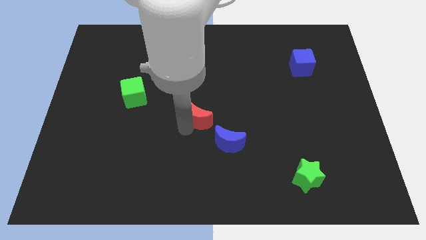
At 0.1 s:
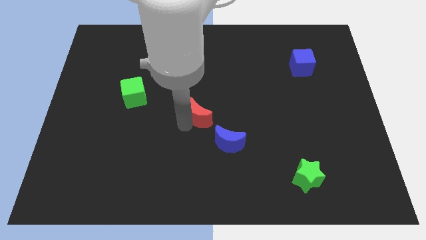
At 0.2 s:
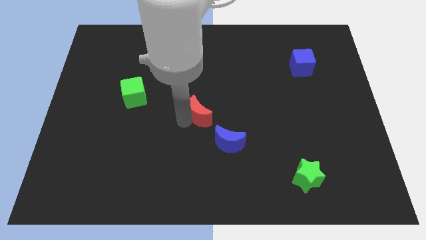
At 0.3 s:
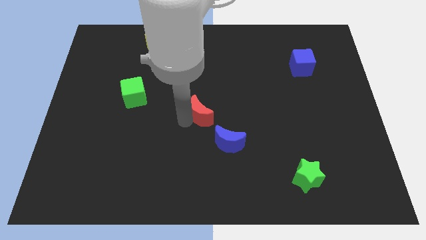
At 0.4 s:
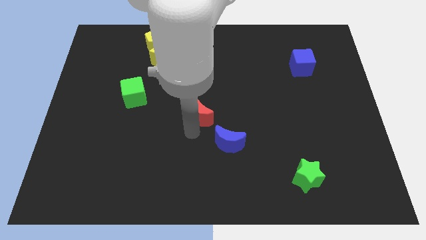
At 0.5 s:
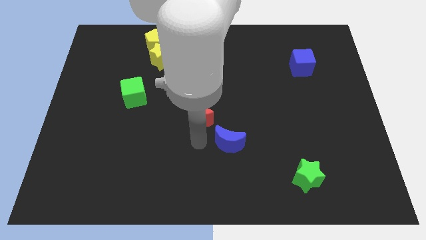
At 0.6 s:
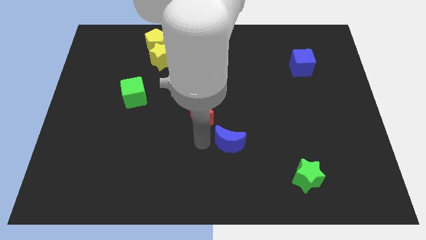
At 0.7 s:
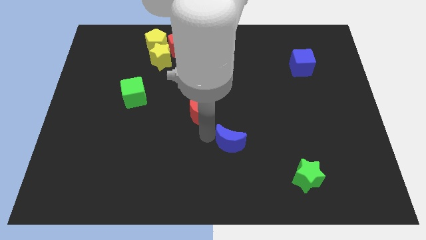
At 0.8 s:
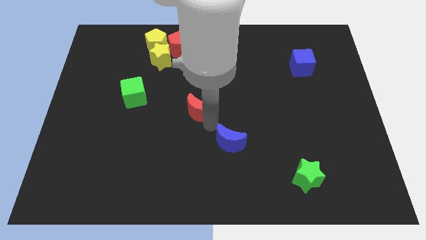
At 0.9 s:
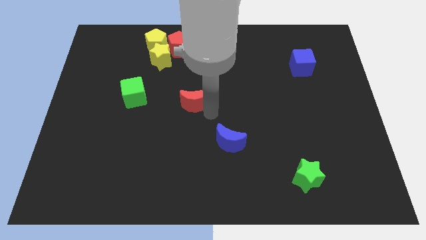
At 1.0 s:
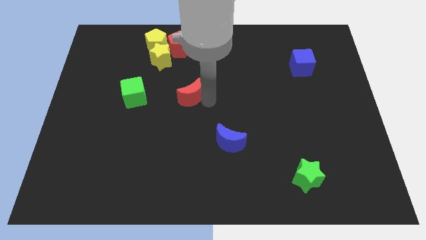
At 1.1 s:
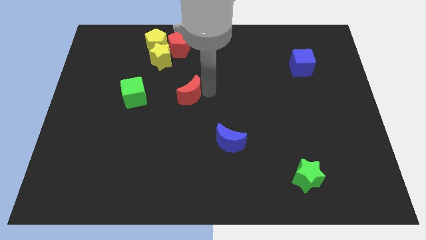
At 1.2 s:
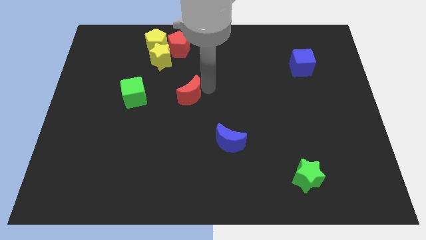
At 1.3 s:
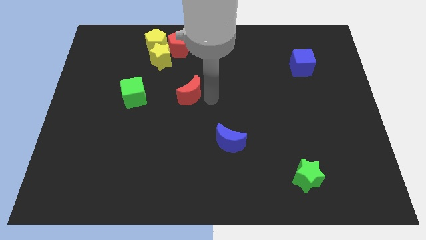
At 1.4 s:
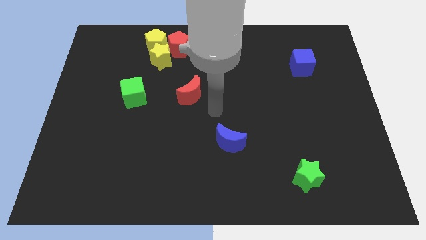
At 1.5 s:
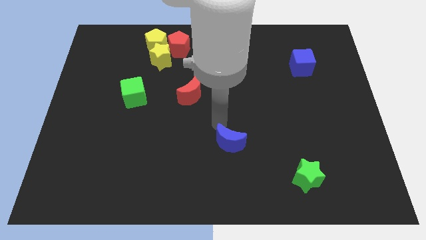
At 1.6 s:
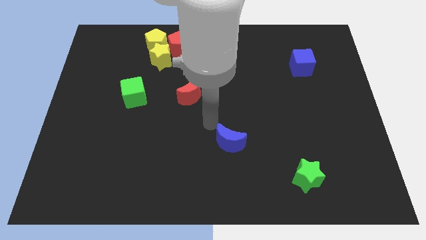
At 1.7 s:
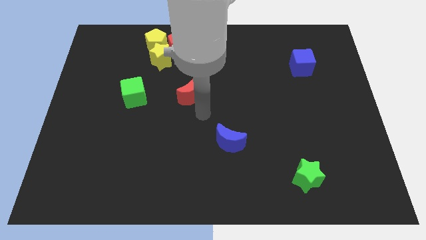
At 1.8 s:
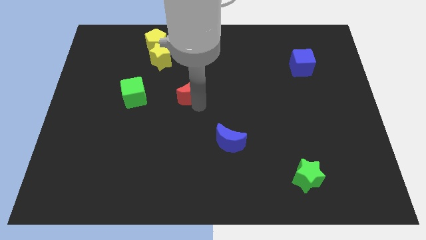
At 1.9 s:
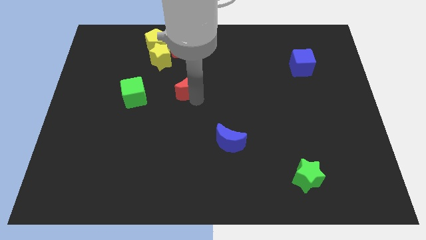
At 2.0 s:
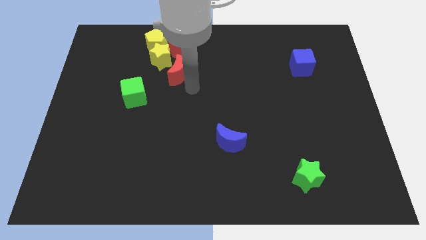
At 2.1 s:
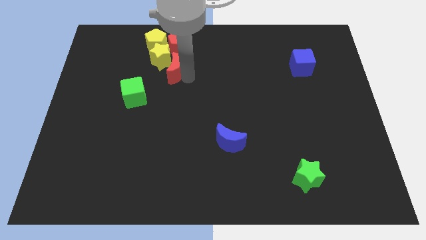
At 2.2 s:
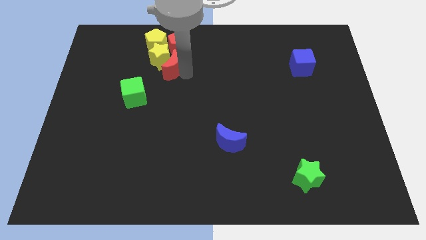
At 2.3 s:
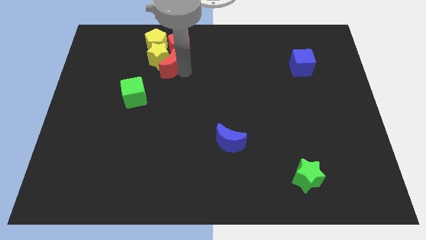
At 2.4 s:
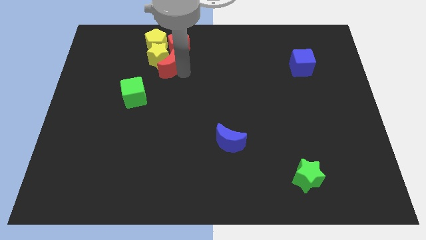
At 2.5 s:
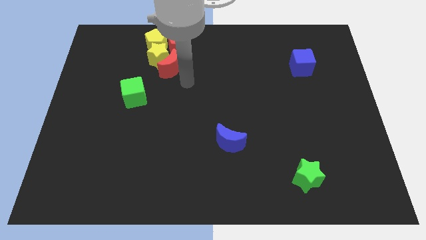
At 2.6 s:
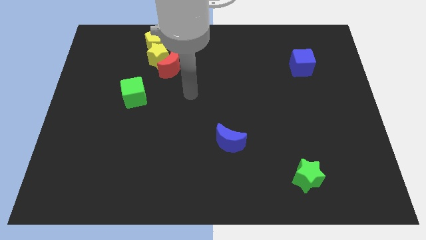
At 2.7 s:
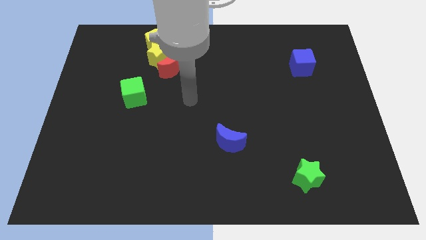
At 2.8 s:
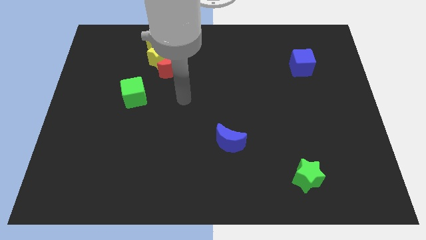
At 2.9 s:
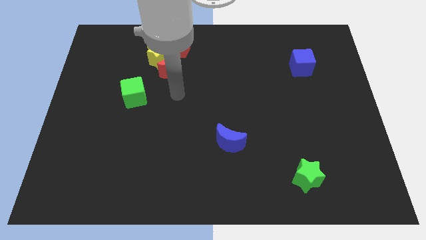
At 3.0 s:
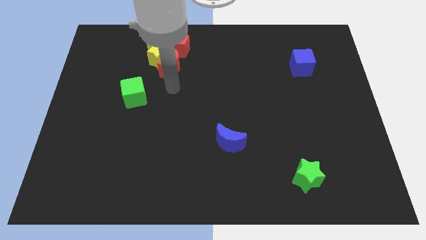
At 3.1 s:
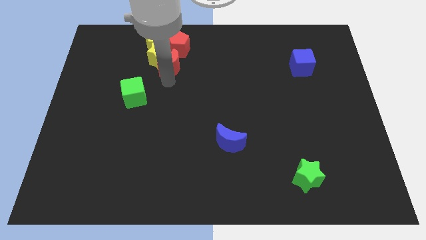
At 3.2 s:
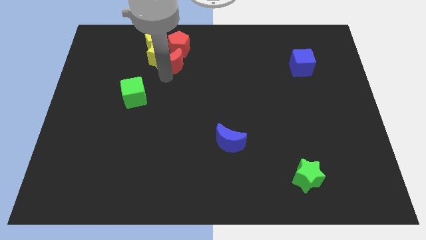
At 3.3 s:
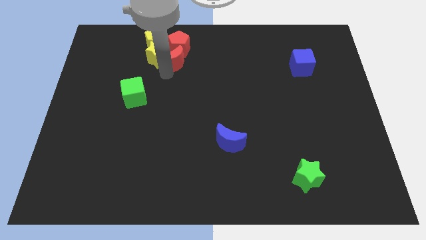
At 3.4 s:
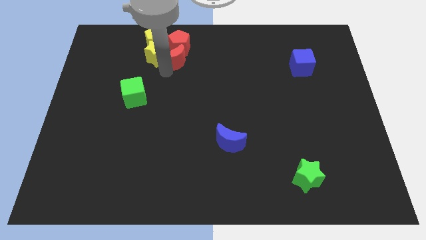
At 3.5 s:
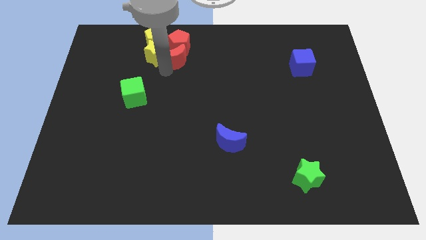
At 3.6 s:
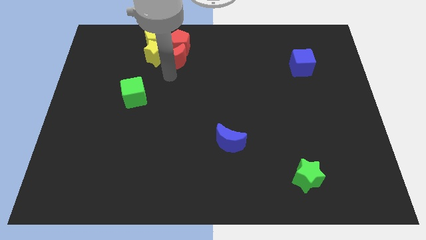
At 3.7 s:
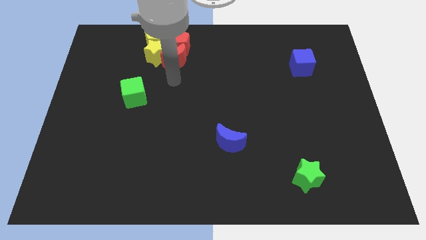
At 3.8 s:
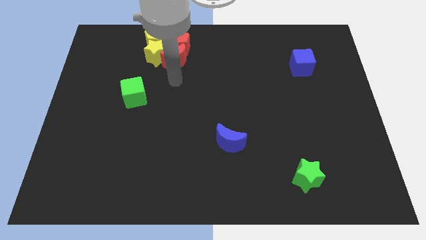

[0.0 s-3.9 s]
push the red crescent to the group of blocks

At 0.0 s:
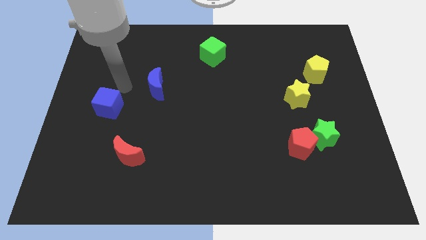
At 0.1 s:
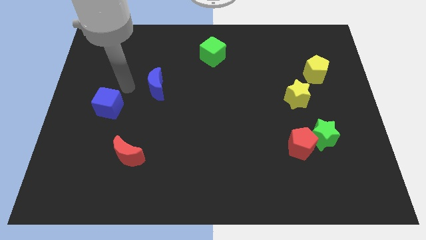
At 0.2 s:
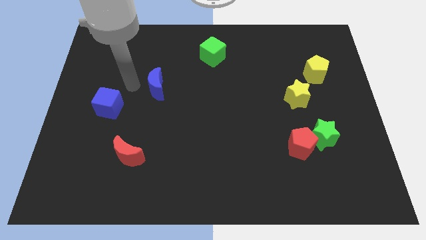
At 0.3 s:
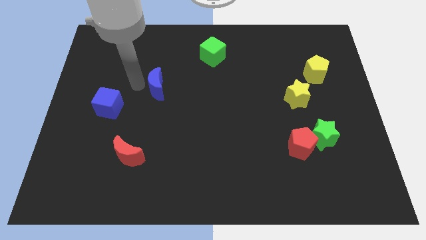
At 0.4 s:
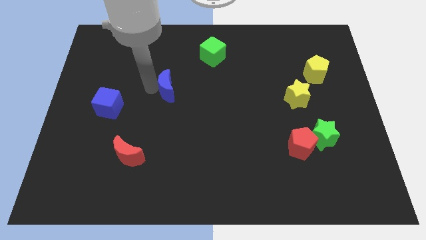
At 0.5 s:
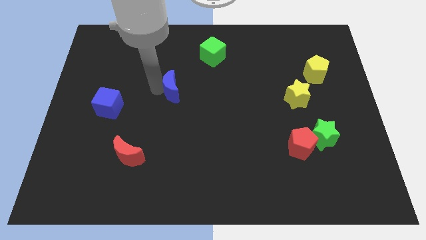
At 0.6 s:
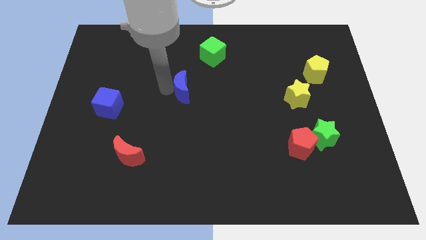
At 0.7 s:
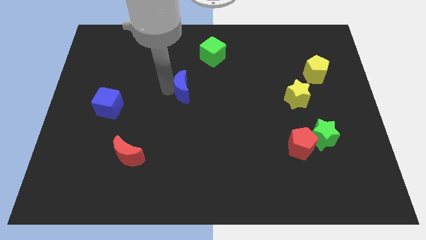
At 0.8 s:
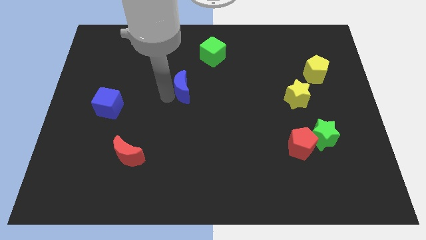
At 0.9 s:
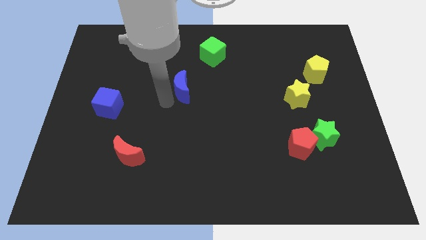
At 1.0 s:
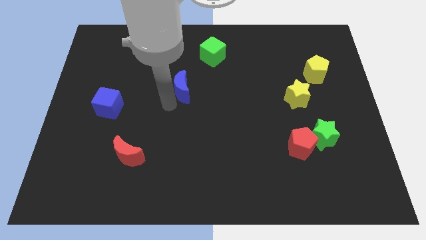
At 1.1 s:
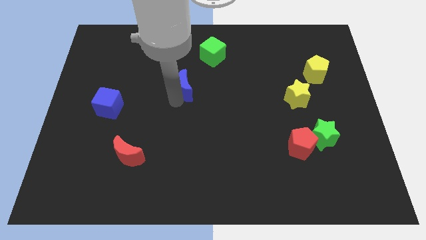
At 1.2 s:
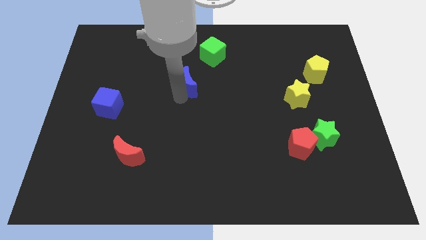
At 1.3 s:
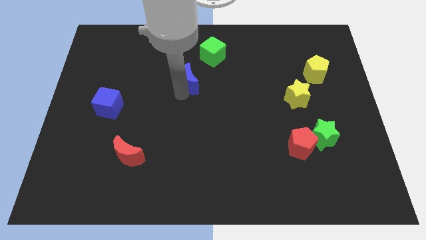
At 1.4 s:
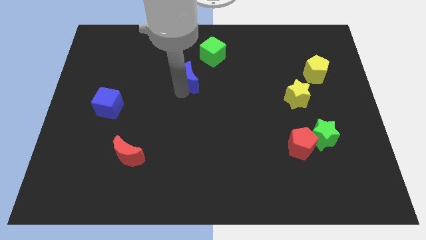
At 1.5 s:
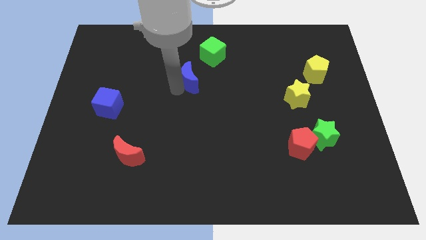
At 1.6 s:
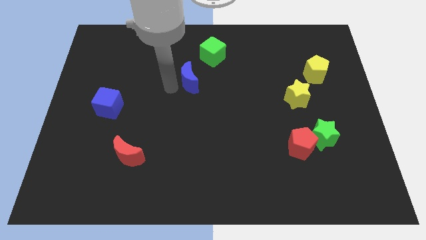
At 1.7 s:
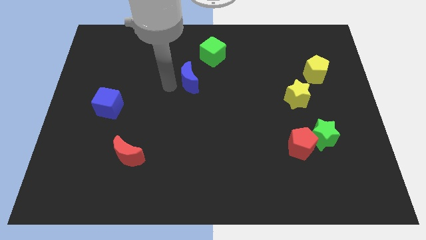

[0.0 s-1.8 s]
move the blue crescent towards the green cube

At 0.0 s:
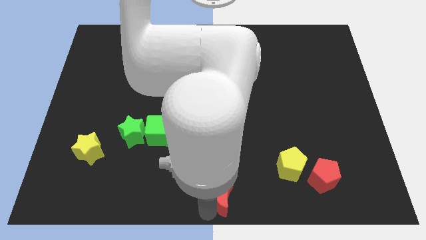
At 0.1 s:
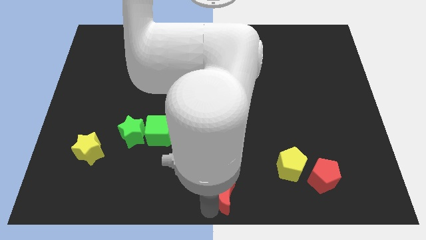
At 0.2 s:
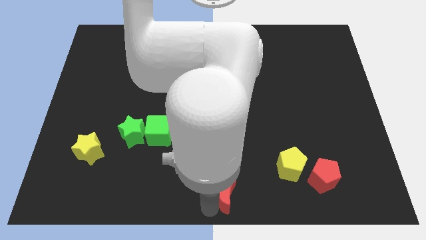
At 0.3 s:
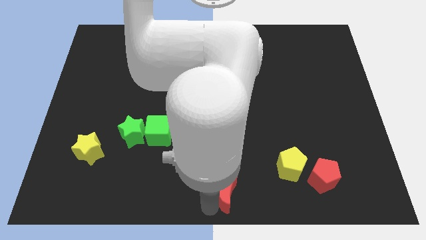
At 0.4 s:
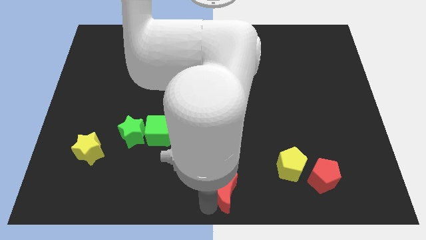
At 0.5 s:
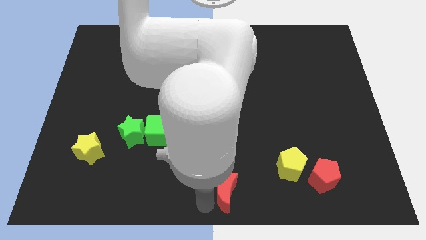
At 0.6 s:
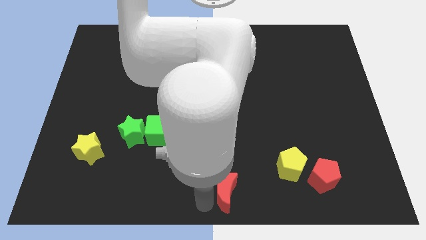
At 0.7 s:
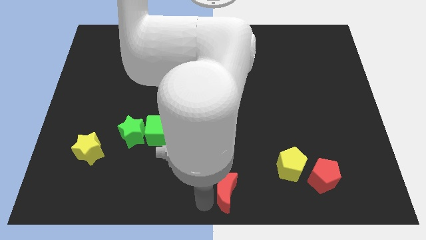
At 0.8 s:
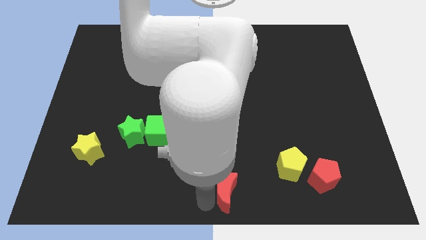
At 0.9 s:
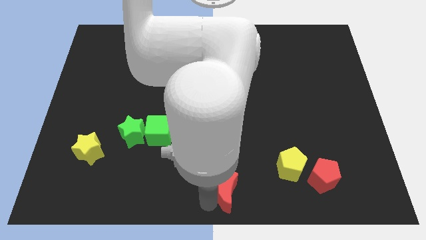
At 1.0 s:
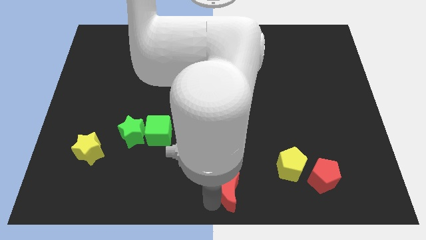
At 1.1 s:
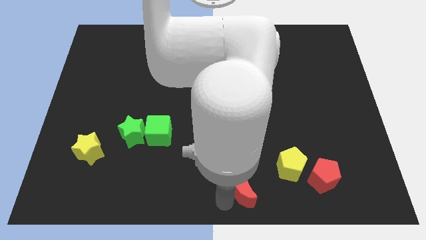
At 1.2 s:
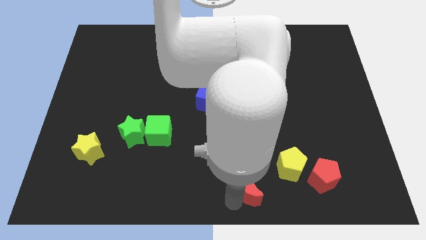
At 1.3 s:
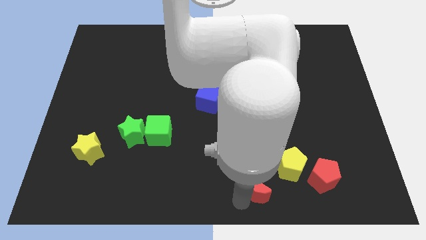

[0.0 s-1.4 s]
move the red crescent towards the yellow pentagon

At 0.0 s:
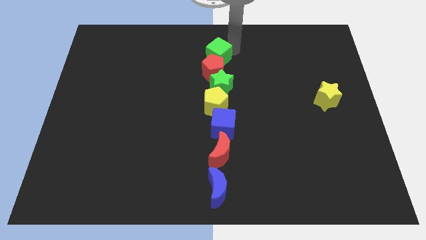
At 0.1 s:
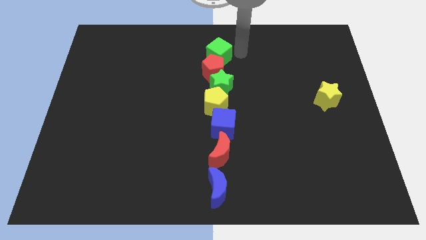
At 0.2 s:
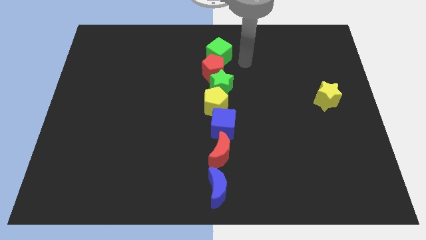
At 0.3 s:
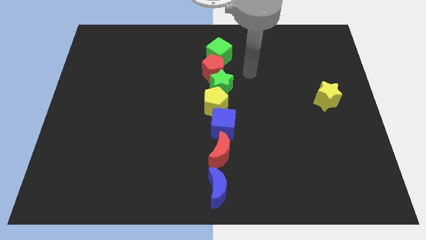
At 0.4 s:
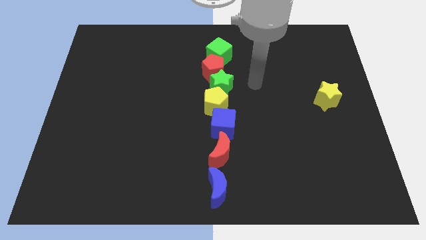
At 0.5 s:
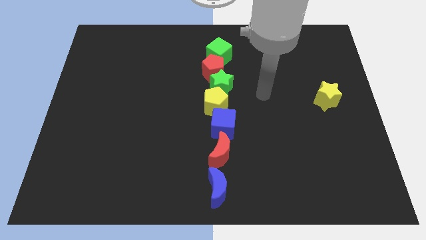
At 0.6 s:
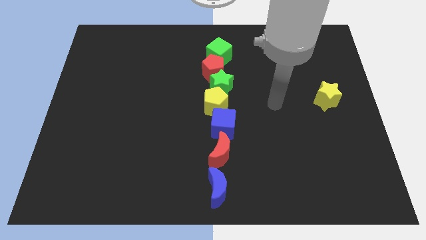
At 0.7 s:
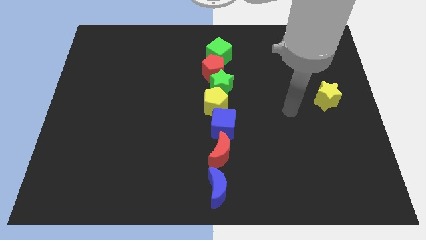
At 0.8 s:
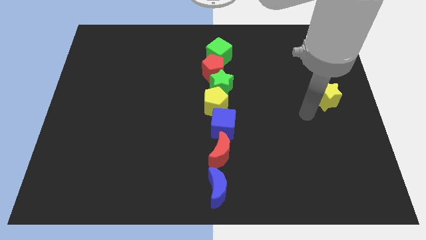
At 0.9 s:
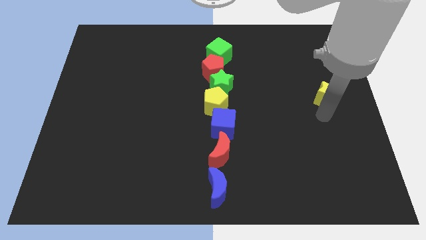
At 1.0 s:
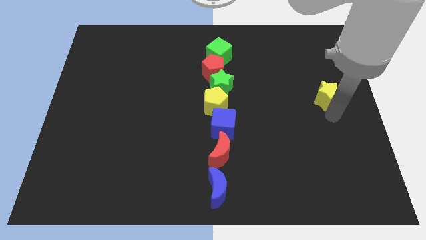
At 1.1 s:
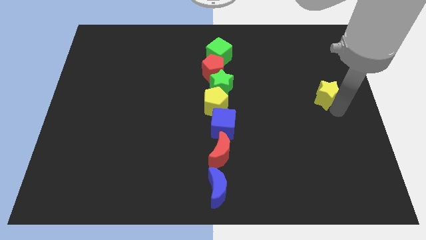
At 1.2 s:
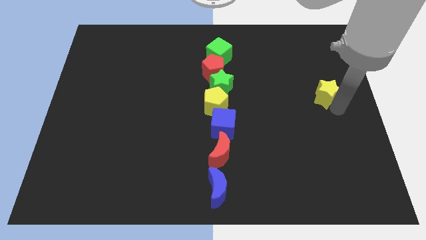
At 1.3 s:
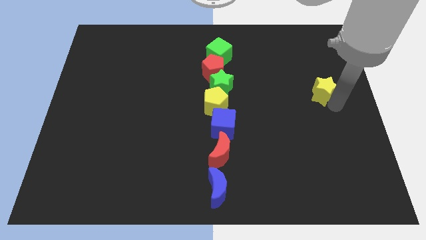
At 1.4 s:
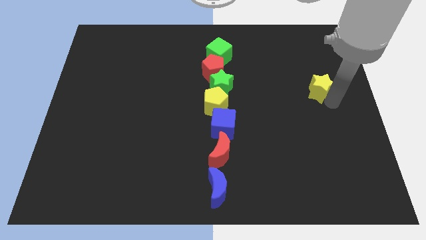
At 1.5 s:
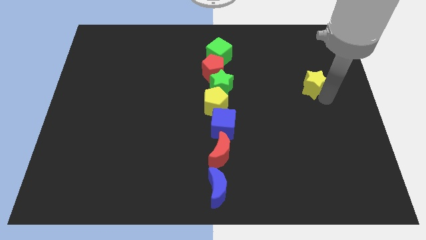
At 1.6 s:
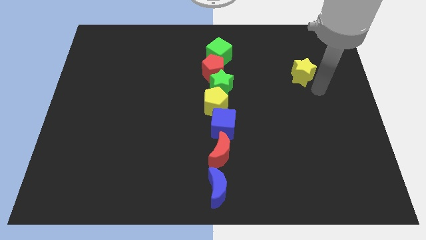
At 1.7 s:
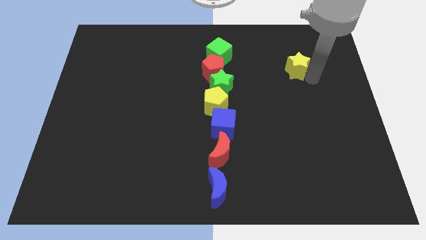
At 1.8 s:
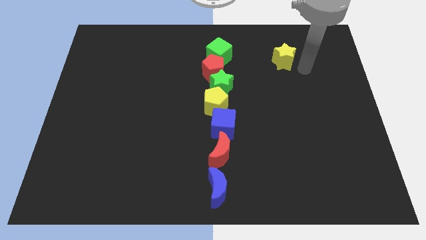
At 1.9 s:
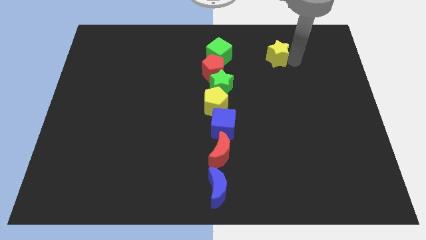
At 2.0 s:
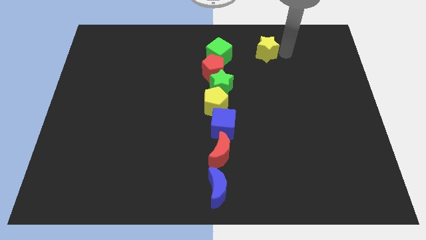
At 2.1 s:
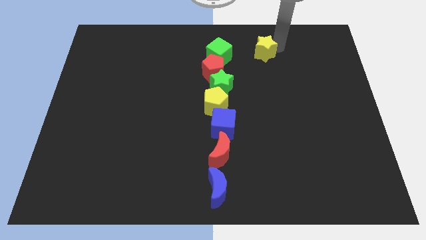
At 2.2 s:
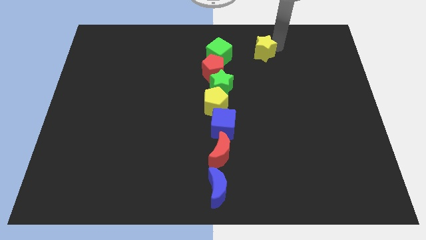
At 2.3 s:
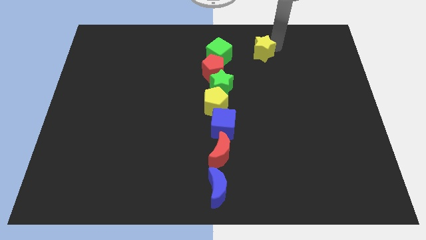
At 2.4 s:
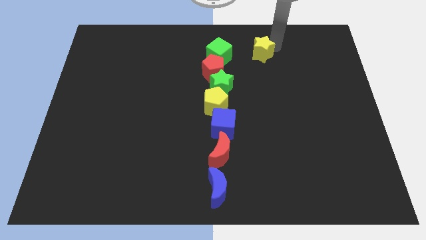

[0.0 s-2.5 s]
place the yellow star parallel to green cube
